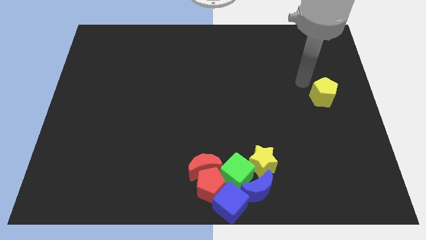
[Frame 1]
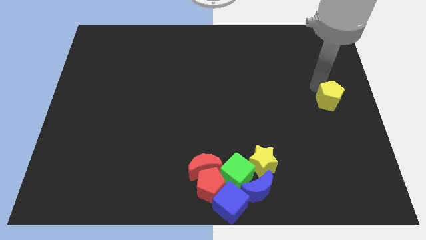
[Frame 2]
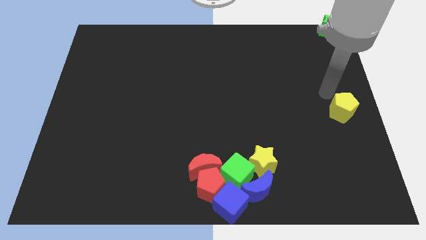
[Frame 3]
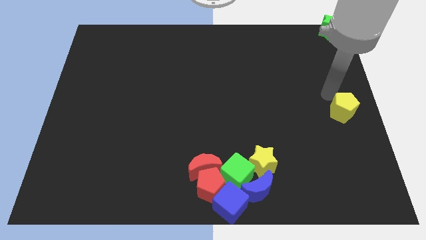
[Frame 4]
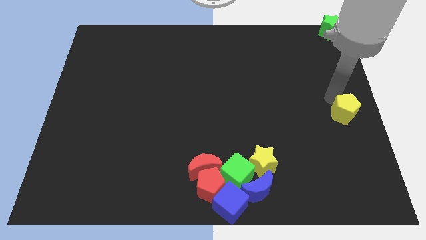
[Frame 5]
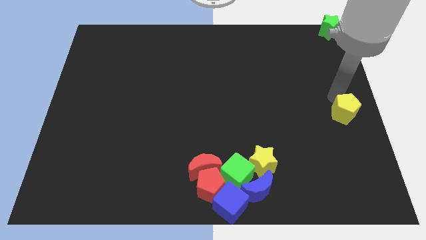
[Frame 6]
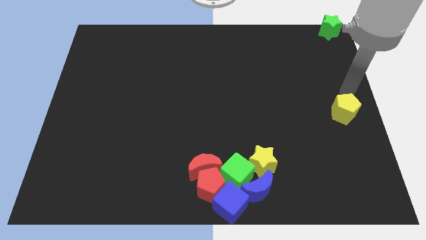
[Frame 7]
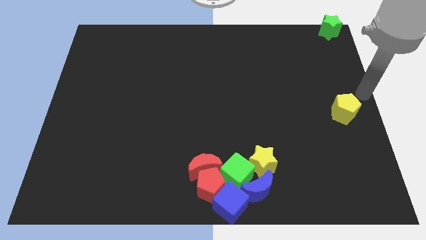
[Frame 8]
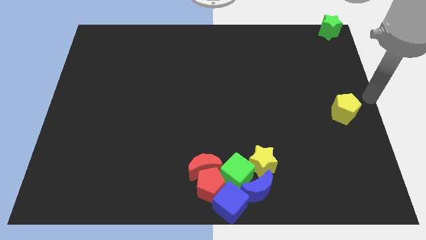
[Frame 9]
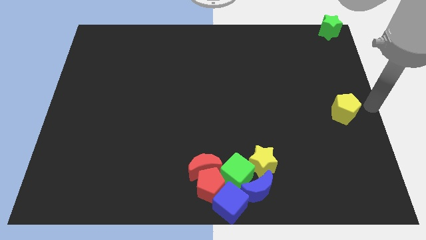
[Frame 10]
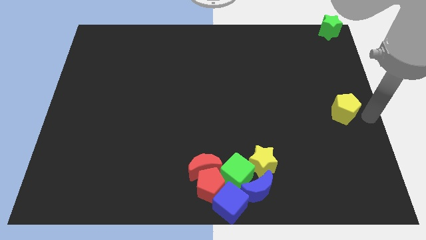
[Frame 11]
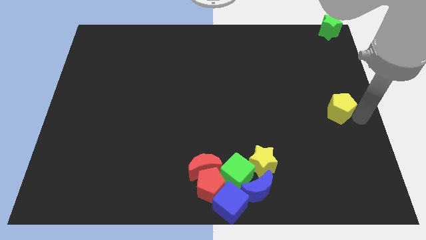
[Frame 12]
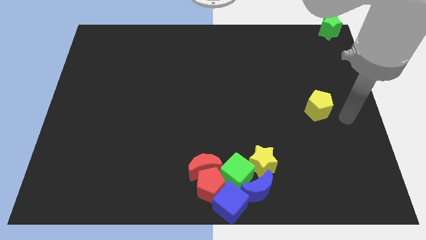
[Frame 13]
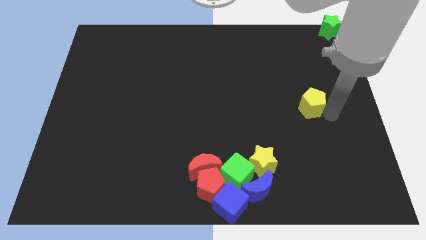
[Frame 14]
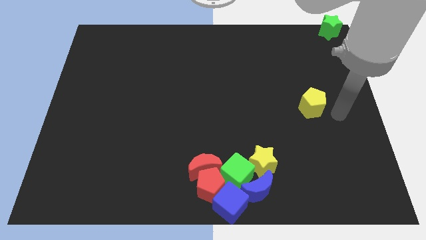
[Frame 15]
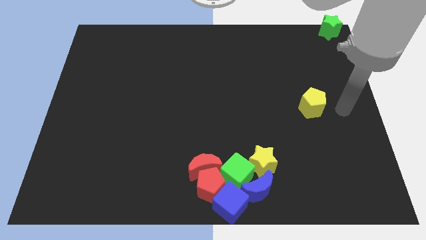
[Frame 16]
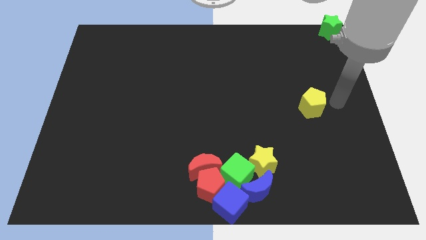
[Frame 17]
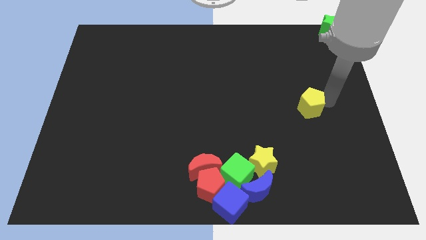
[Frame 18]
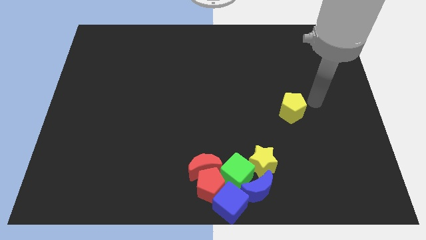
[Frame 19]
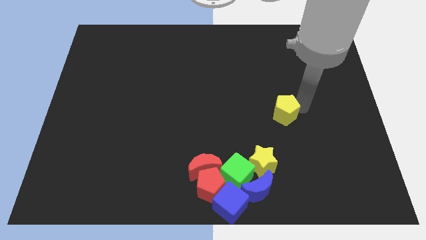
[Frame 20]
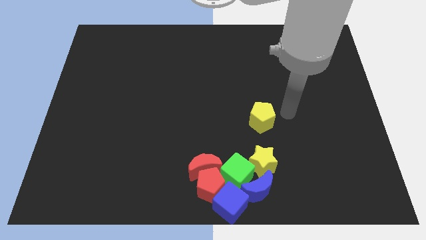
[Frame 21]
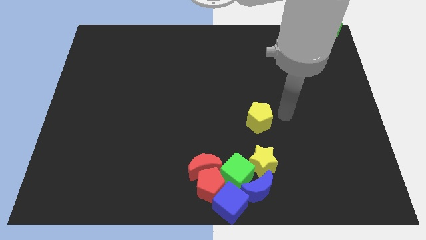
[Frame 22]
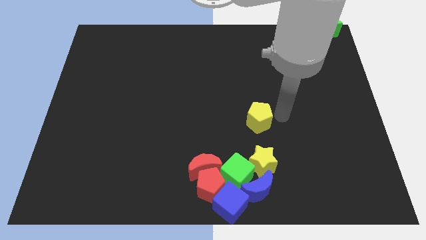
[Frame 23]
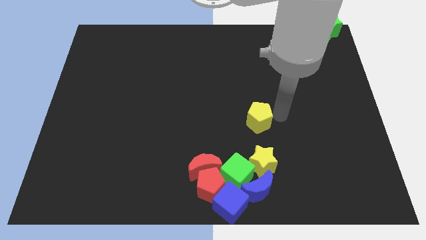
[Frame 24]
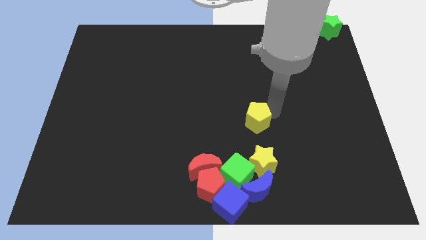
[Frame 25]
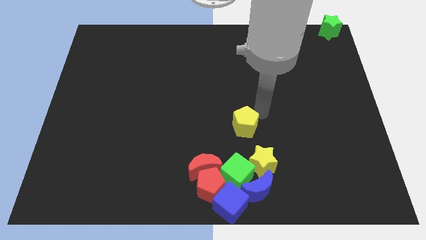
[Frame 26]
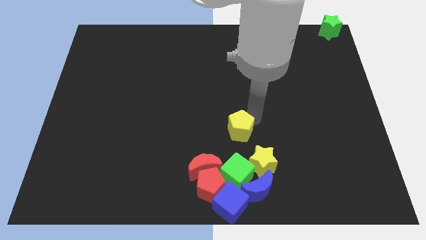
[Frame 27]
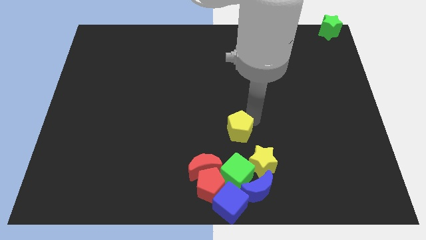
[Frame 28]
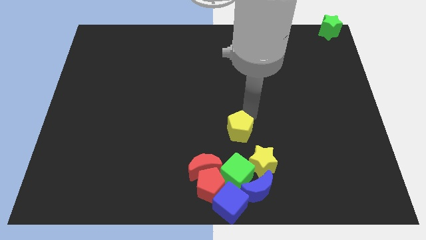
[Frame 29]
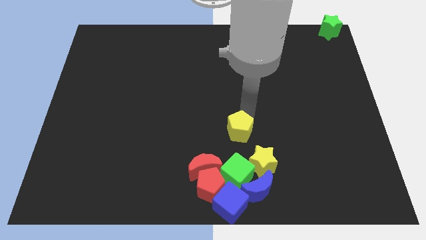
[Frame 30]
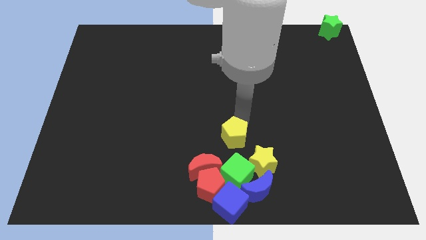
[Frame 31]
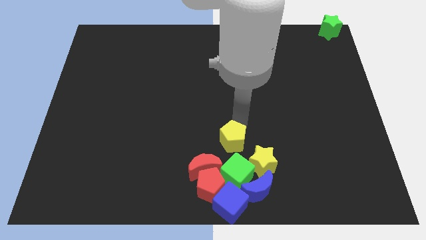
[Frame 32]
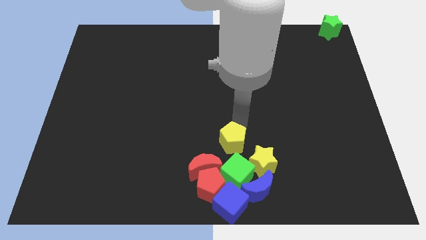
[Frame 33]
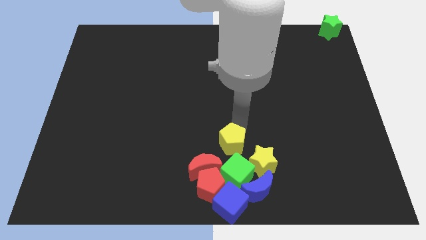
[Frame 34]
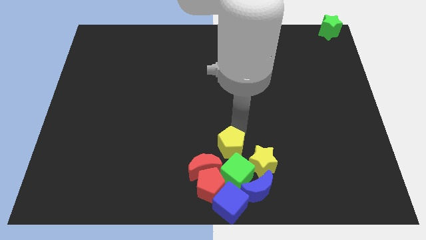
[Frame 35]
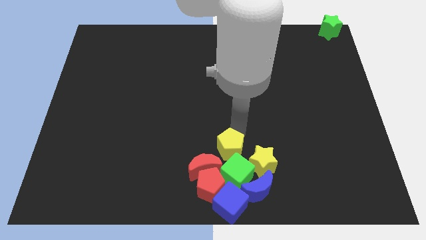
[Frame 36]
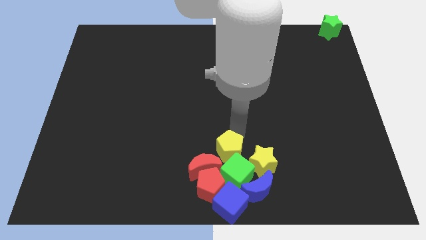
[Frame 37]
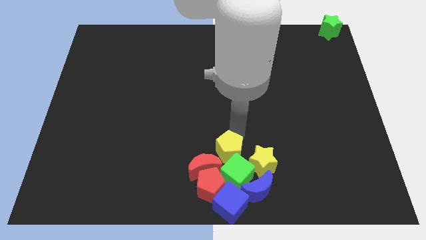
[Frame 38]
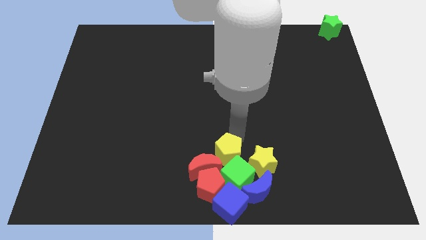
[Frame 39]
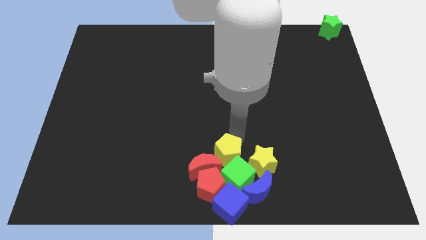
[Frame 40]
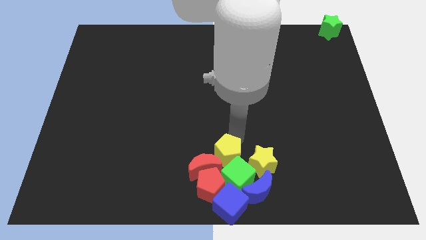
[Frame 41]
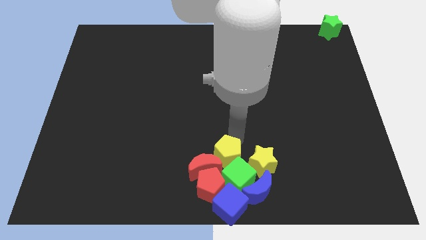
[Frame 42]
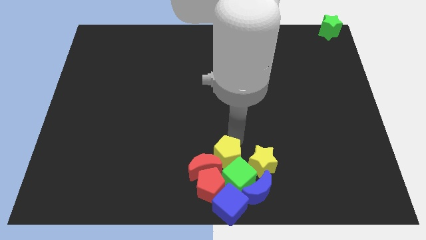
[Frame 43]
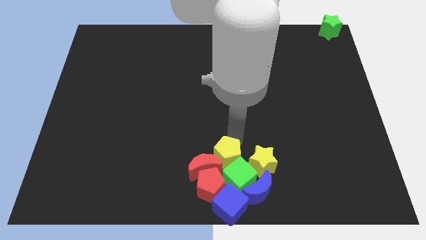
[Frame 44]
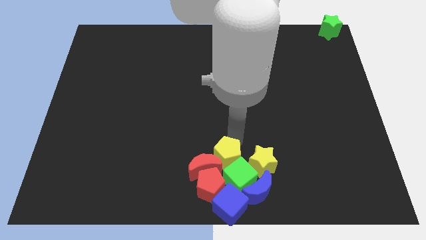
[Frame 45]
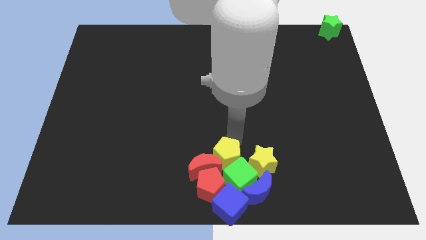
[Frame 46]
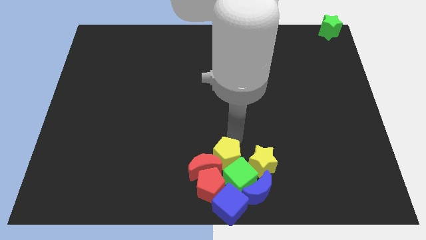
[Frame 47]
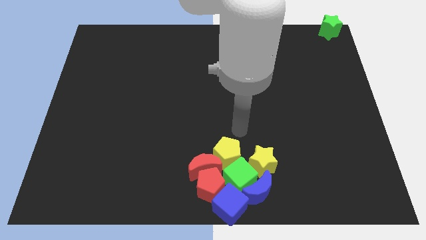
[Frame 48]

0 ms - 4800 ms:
push the yellow pentagon into the top of the green cube

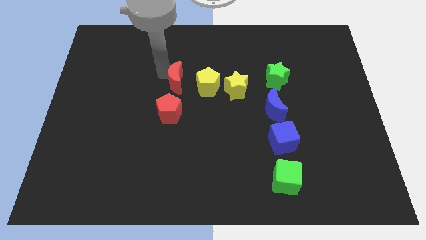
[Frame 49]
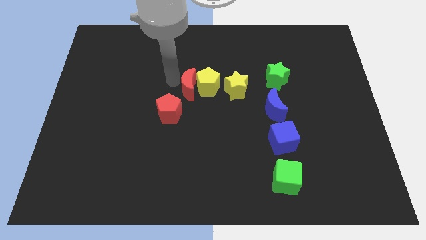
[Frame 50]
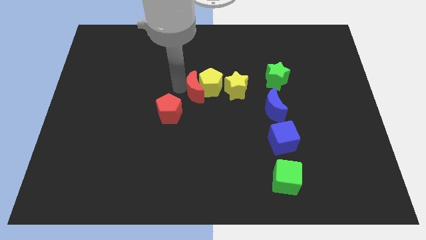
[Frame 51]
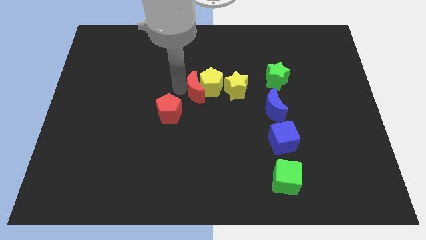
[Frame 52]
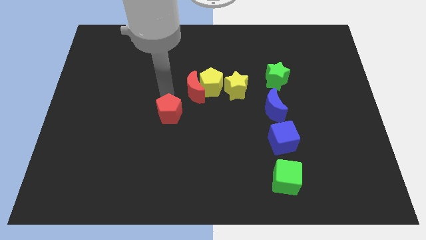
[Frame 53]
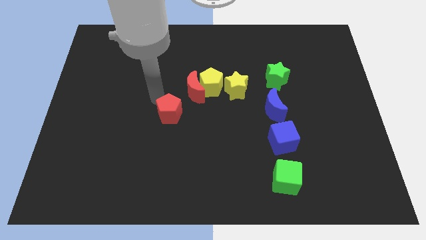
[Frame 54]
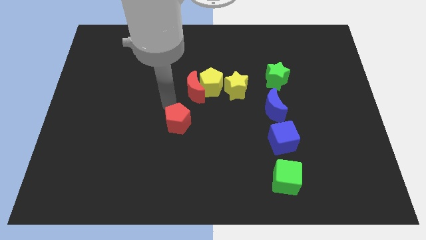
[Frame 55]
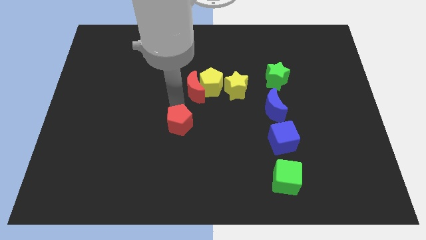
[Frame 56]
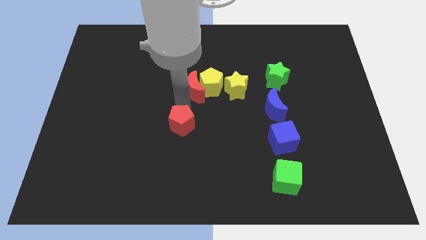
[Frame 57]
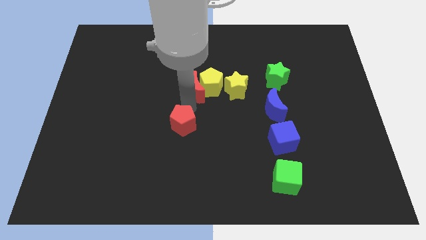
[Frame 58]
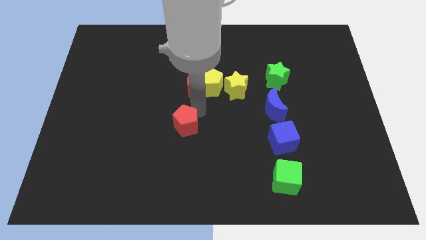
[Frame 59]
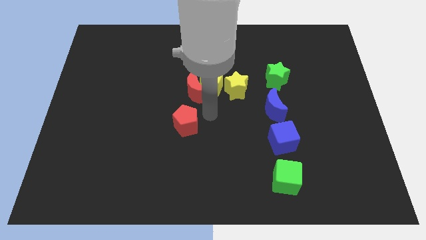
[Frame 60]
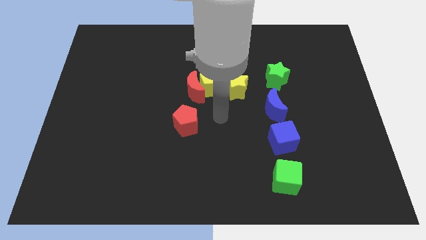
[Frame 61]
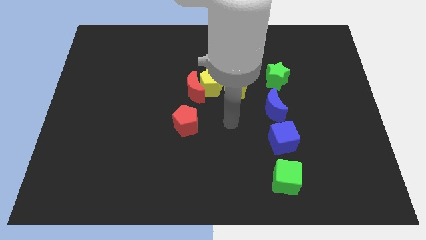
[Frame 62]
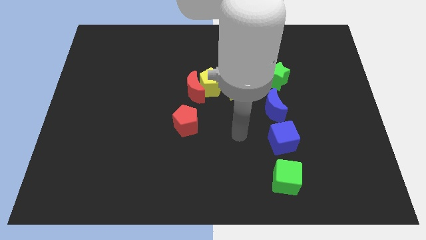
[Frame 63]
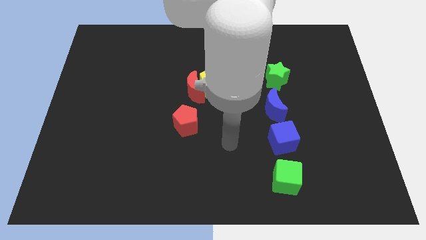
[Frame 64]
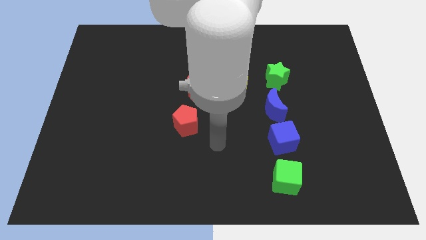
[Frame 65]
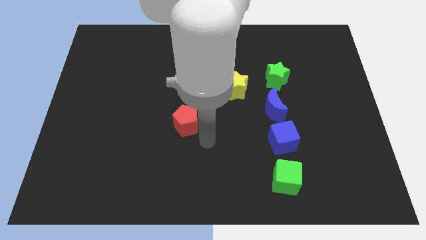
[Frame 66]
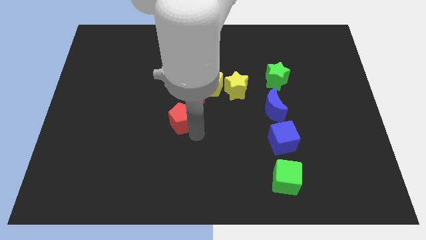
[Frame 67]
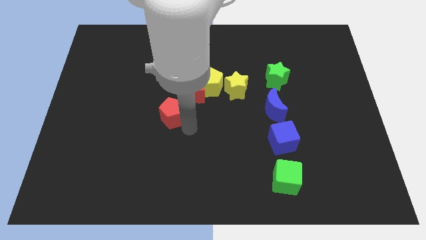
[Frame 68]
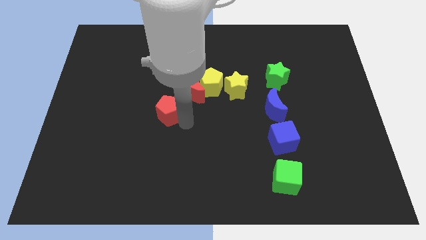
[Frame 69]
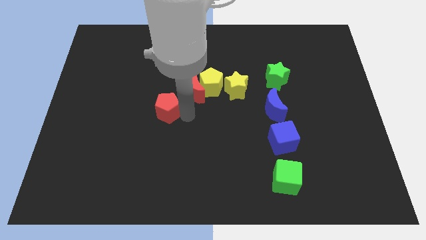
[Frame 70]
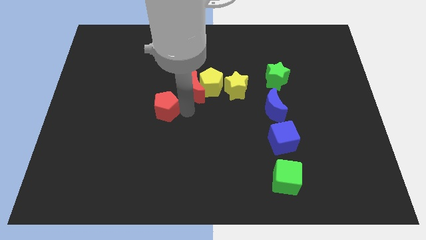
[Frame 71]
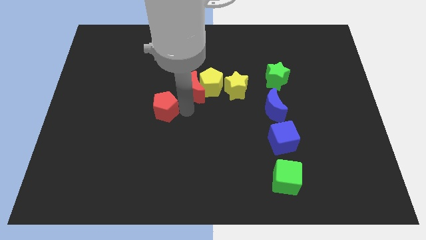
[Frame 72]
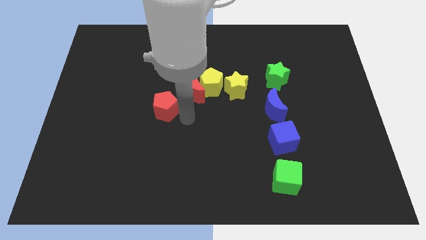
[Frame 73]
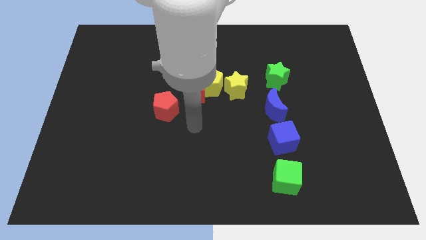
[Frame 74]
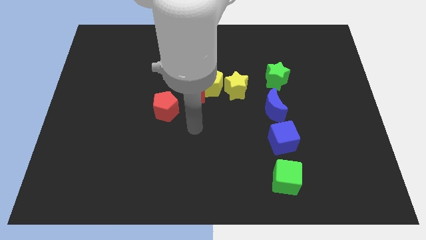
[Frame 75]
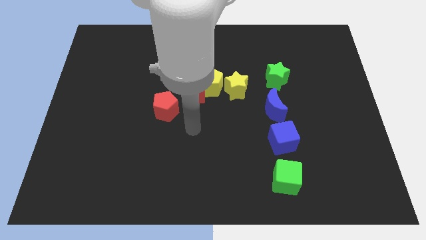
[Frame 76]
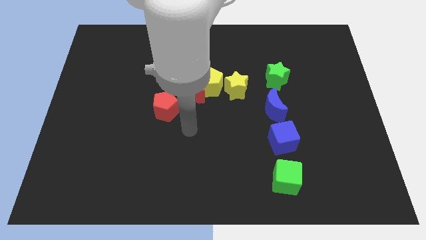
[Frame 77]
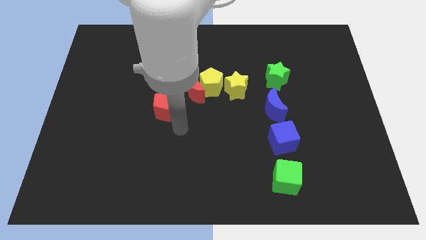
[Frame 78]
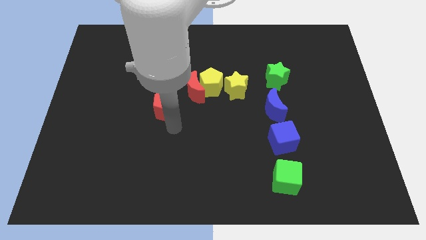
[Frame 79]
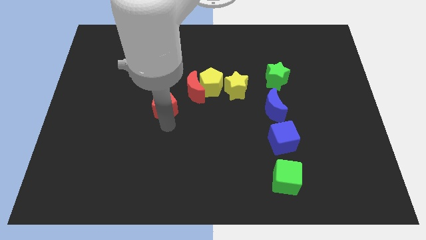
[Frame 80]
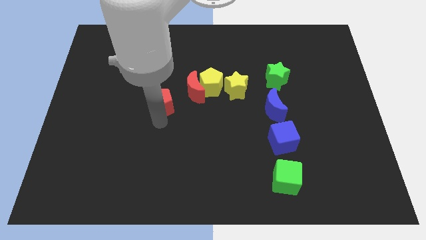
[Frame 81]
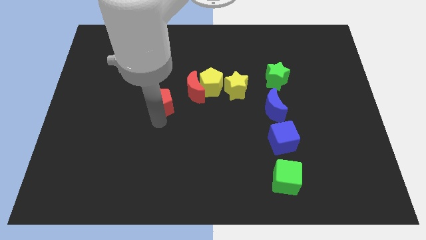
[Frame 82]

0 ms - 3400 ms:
push the red pentagon to the top of the board slightly

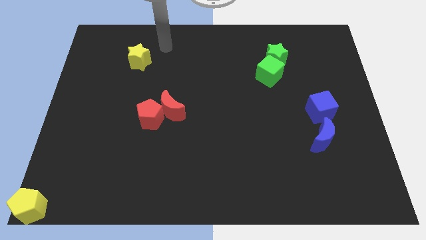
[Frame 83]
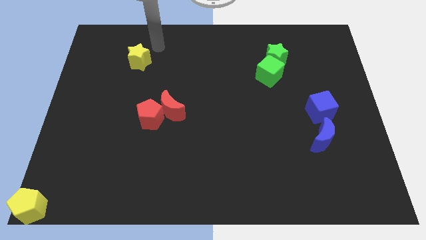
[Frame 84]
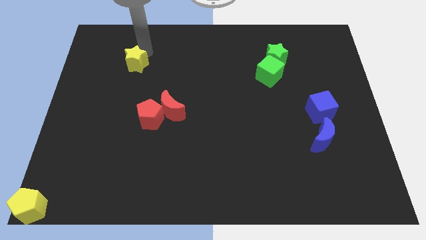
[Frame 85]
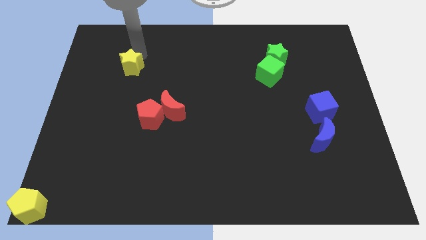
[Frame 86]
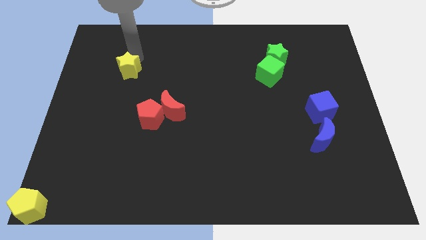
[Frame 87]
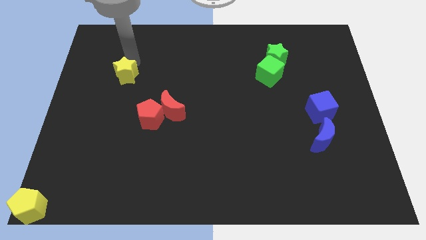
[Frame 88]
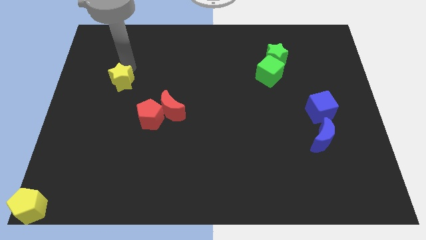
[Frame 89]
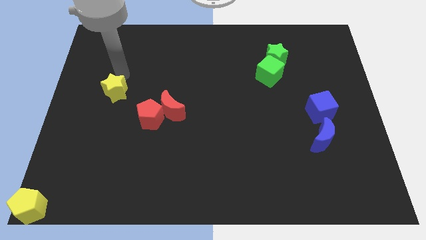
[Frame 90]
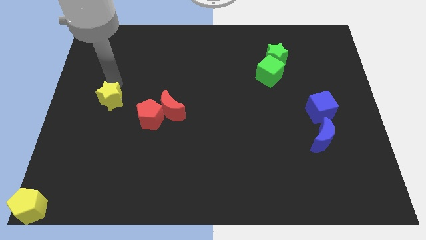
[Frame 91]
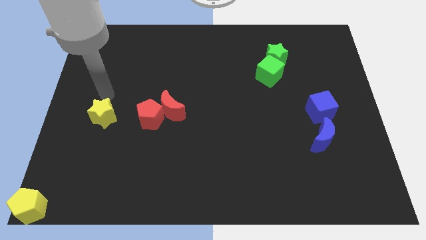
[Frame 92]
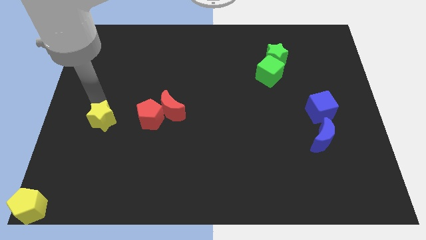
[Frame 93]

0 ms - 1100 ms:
push the yellow star to the left side of the red pentagon
